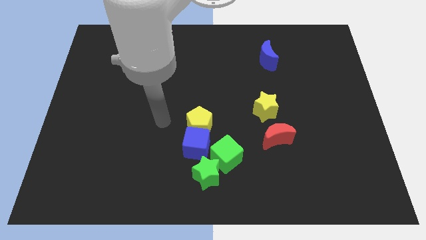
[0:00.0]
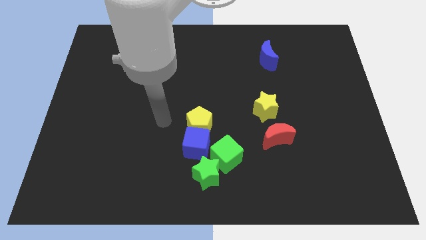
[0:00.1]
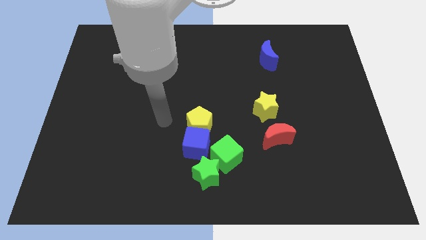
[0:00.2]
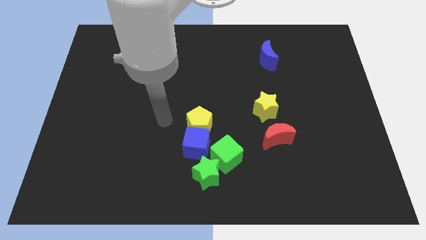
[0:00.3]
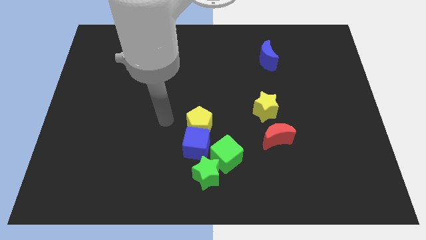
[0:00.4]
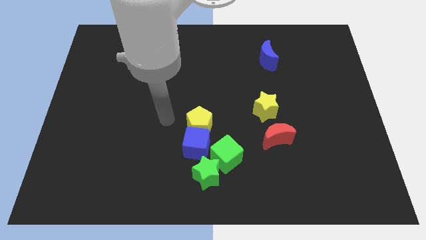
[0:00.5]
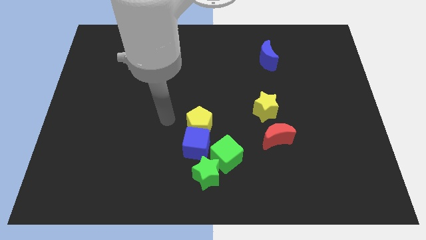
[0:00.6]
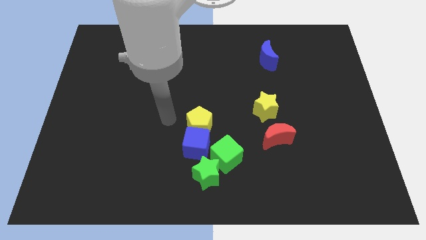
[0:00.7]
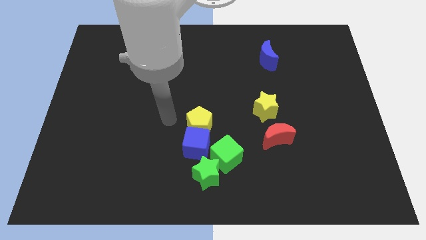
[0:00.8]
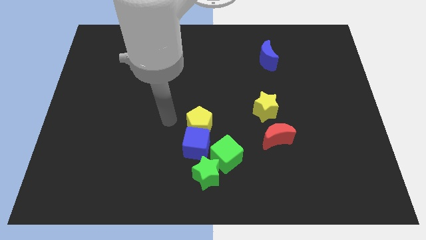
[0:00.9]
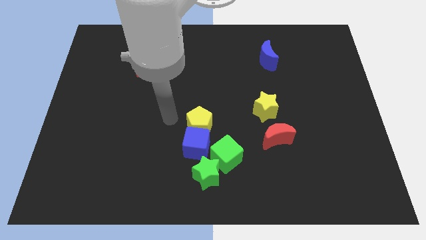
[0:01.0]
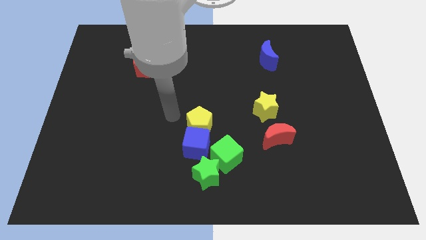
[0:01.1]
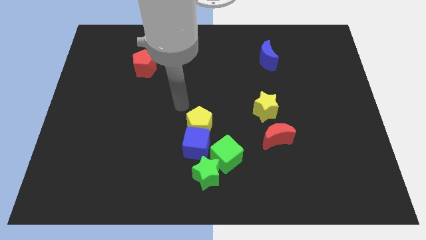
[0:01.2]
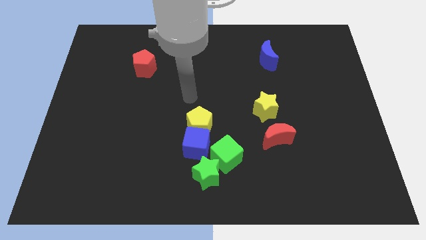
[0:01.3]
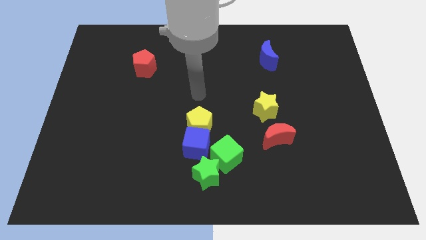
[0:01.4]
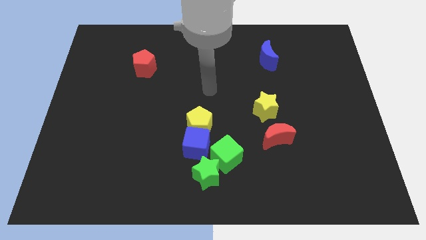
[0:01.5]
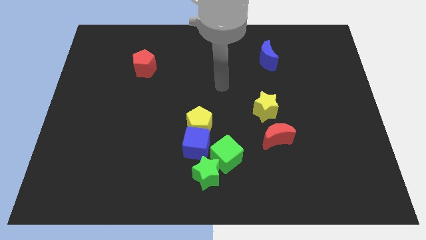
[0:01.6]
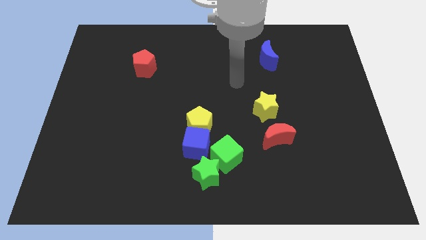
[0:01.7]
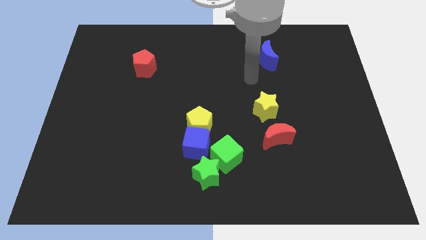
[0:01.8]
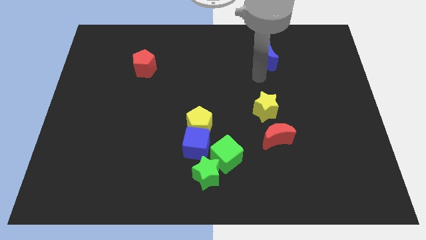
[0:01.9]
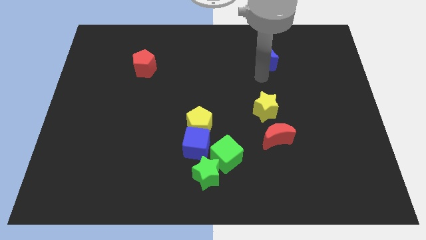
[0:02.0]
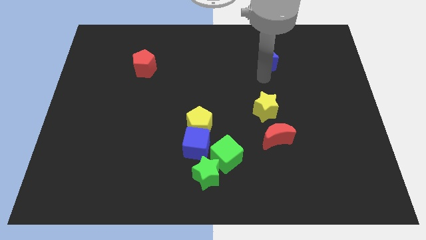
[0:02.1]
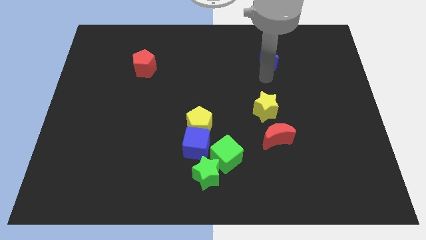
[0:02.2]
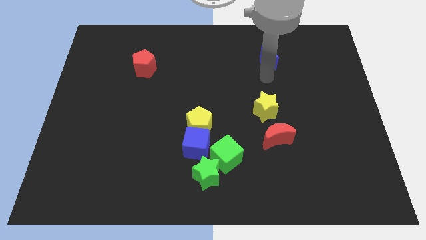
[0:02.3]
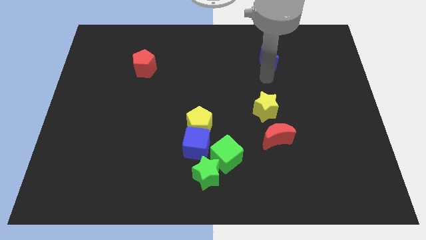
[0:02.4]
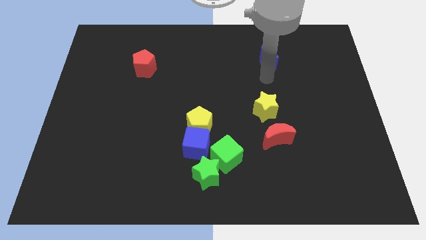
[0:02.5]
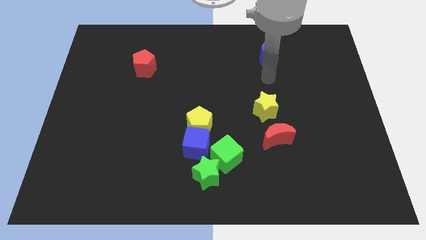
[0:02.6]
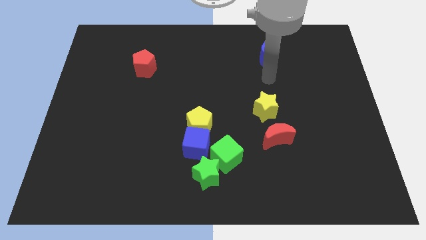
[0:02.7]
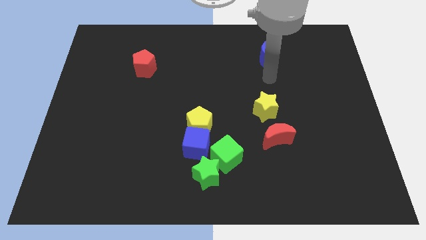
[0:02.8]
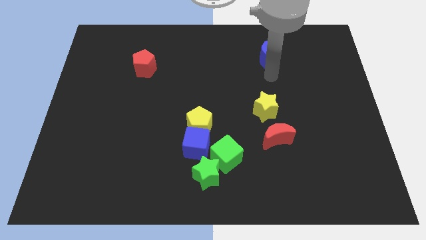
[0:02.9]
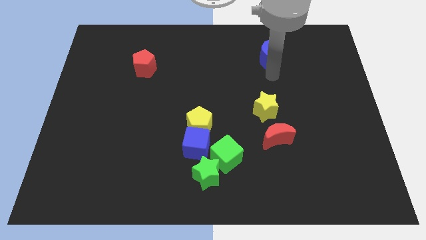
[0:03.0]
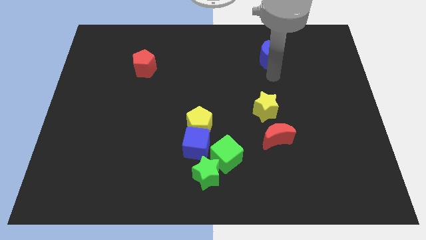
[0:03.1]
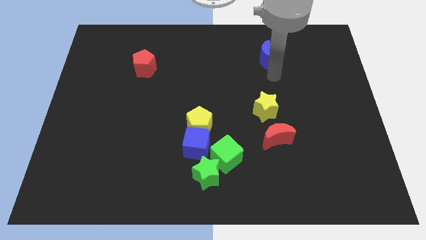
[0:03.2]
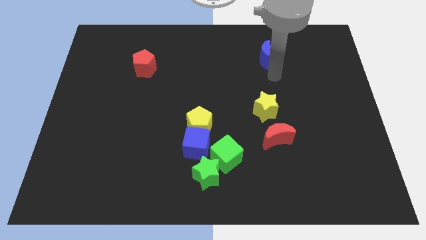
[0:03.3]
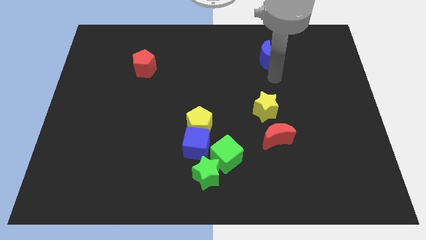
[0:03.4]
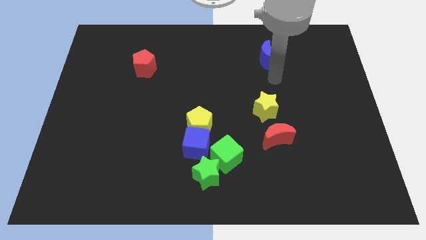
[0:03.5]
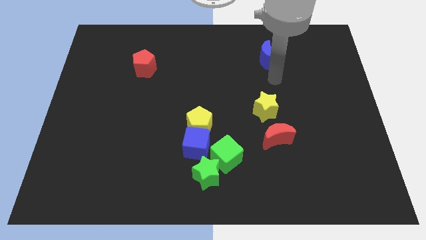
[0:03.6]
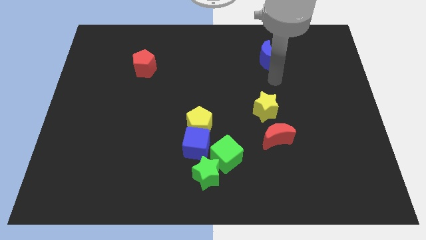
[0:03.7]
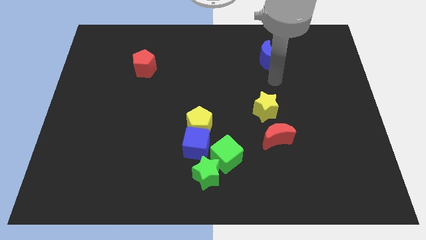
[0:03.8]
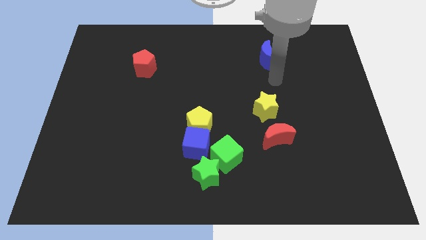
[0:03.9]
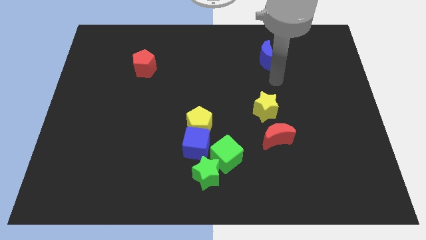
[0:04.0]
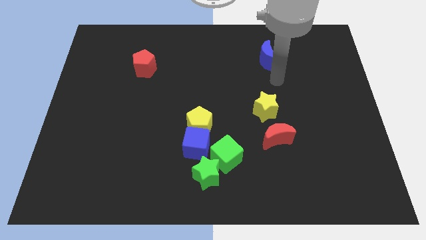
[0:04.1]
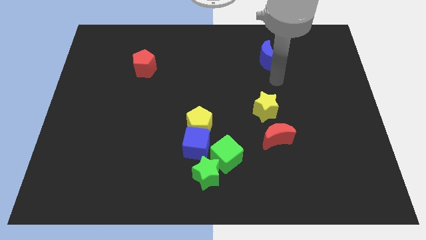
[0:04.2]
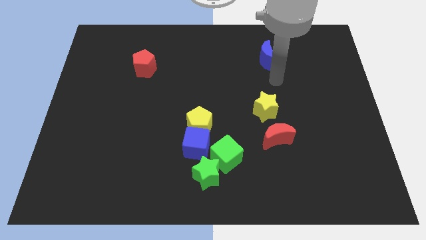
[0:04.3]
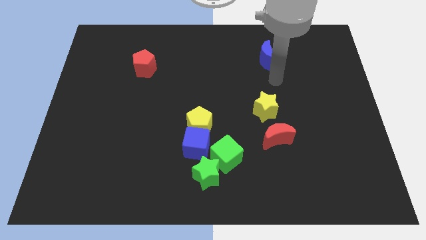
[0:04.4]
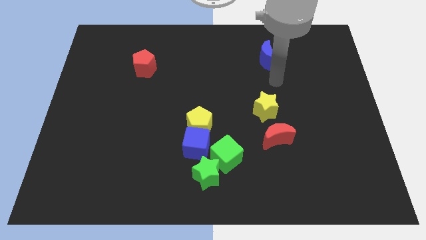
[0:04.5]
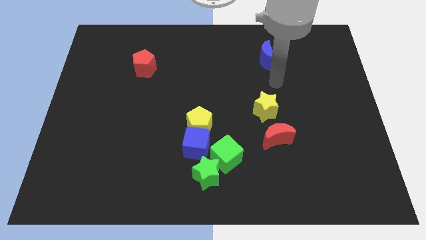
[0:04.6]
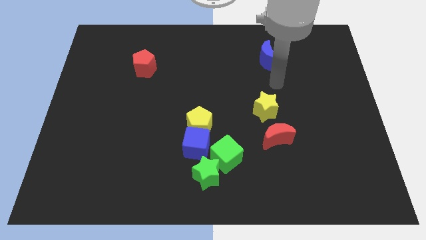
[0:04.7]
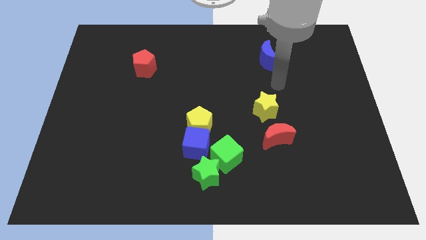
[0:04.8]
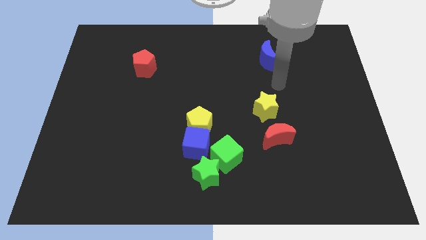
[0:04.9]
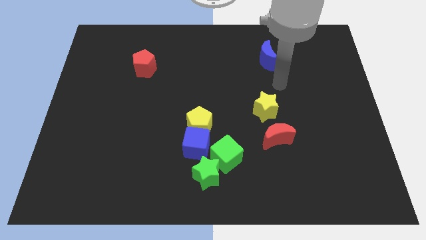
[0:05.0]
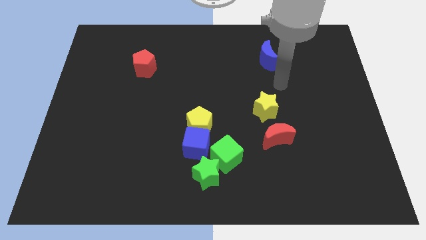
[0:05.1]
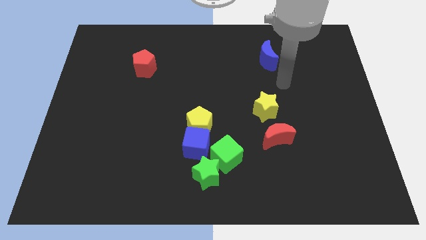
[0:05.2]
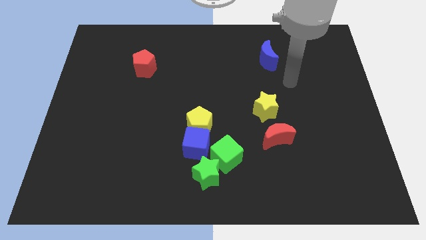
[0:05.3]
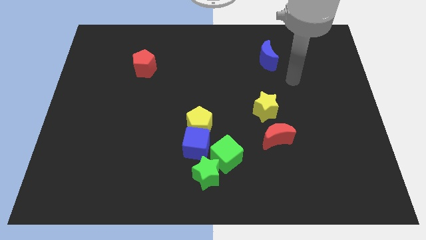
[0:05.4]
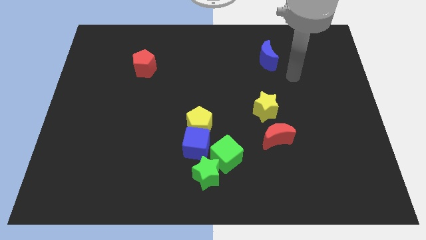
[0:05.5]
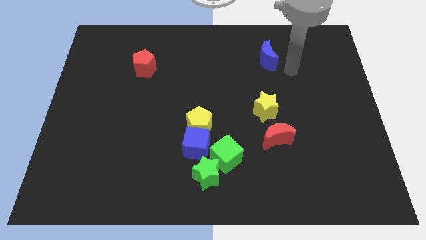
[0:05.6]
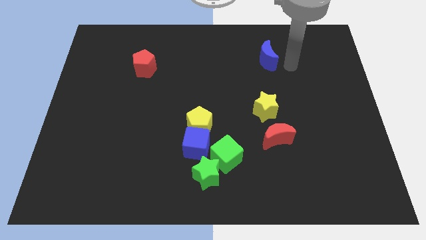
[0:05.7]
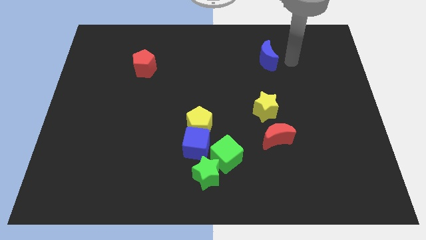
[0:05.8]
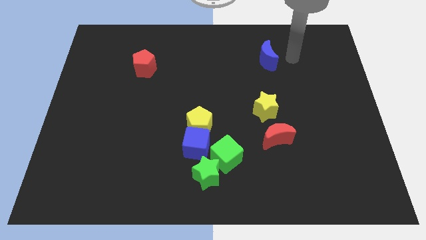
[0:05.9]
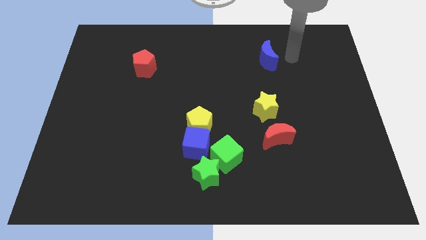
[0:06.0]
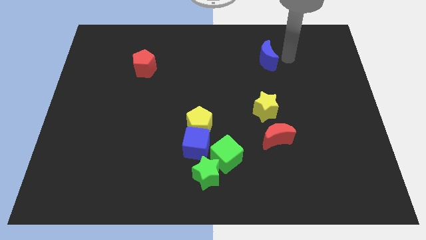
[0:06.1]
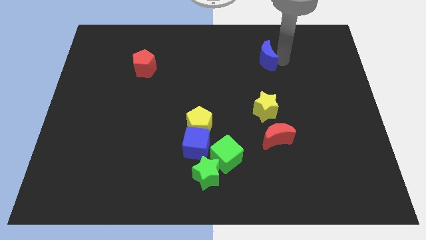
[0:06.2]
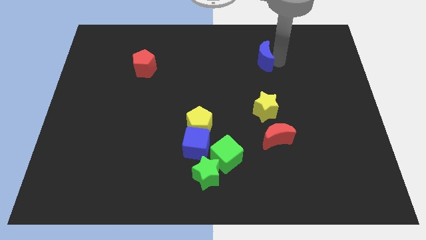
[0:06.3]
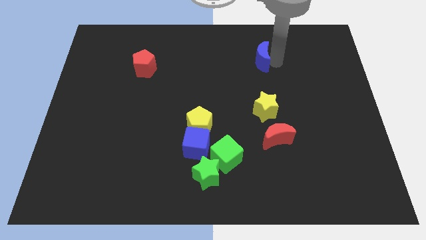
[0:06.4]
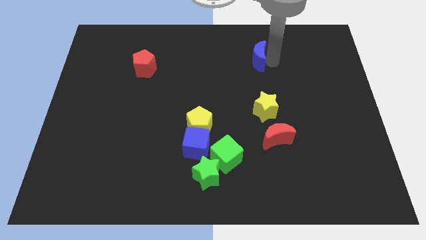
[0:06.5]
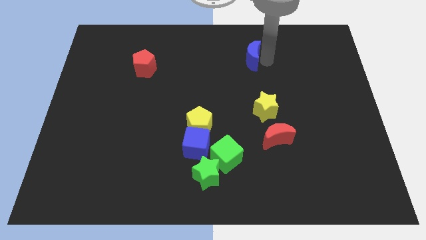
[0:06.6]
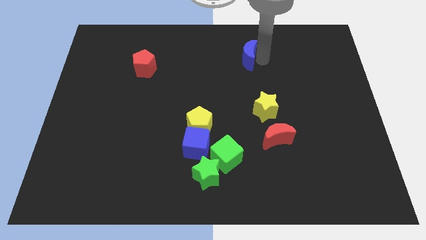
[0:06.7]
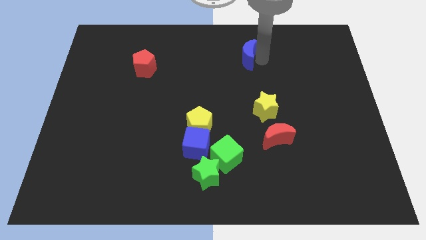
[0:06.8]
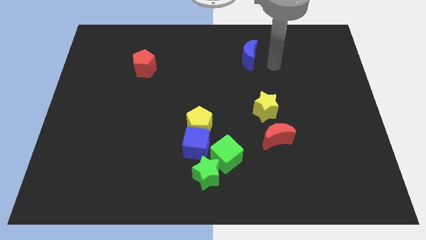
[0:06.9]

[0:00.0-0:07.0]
move the blue crescent slightly to the left side of the table

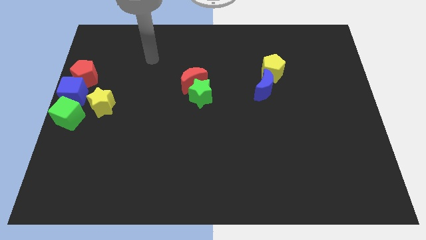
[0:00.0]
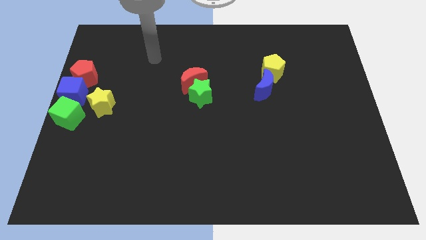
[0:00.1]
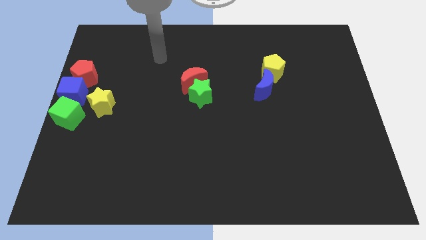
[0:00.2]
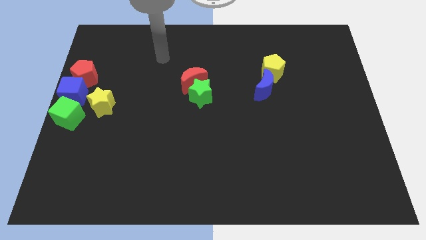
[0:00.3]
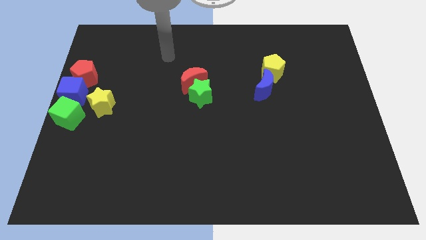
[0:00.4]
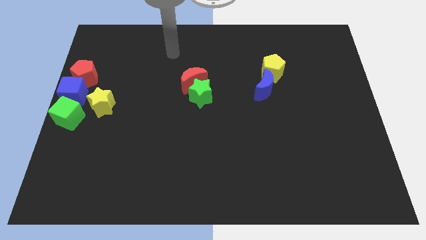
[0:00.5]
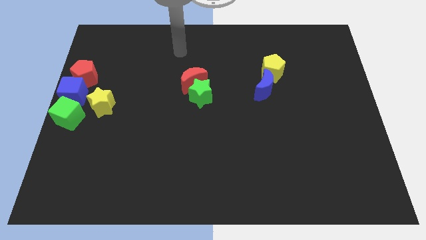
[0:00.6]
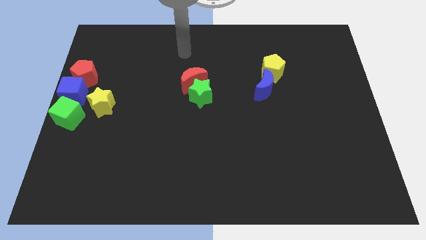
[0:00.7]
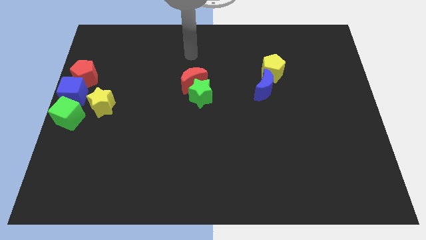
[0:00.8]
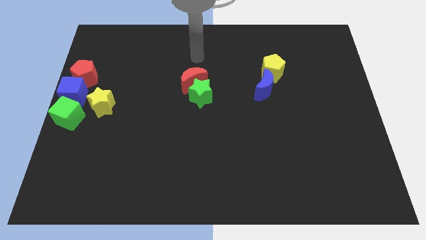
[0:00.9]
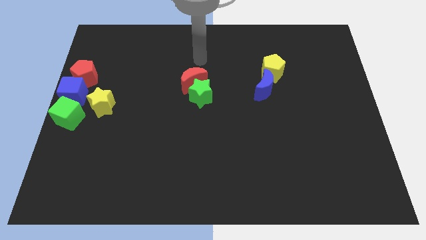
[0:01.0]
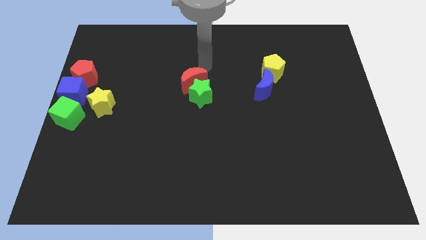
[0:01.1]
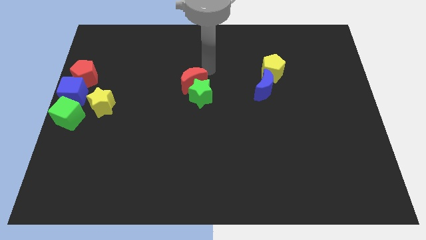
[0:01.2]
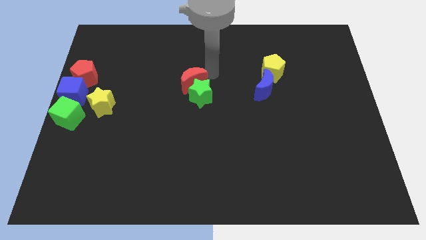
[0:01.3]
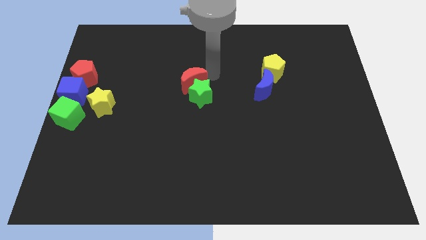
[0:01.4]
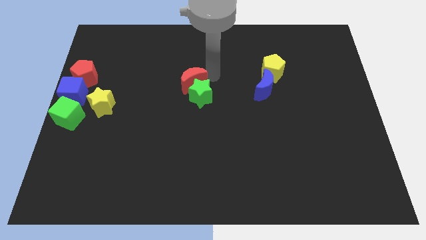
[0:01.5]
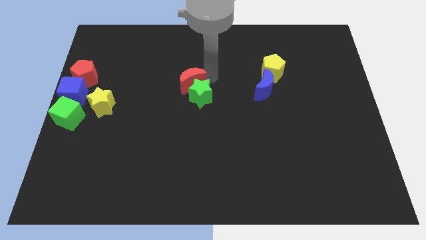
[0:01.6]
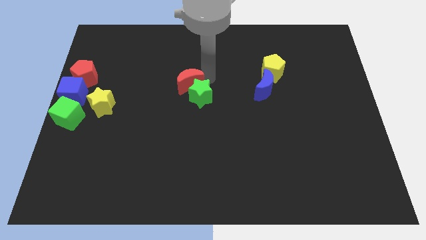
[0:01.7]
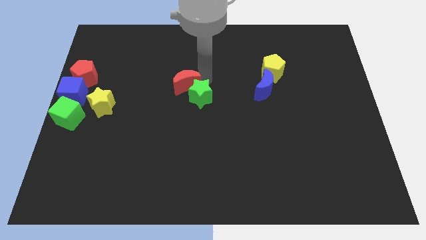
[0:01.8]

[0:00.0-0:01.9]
move the red moon slightly to the left
